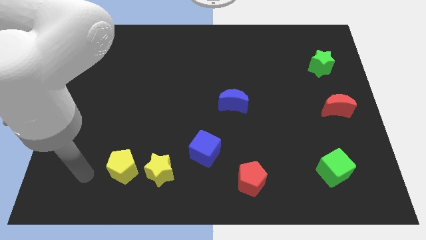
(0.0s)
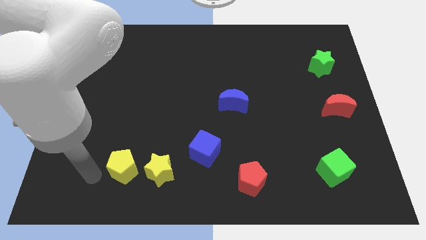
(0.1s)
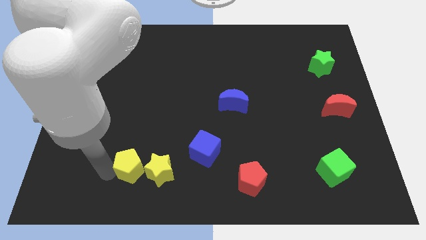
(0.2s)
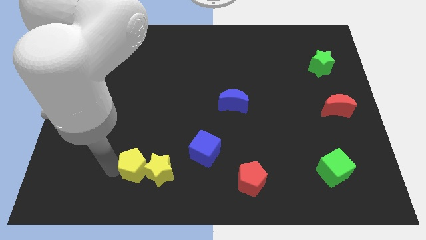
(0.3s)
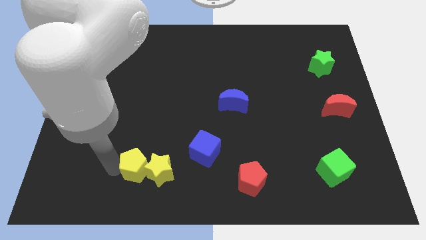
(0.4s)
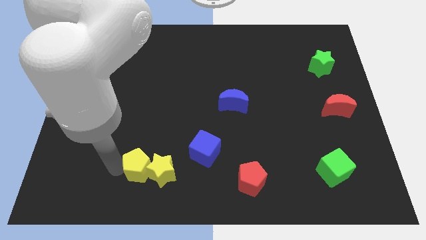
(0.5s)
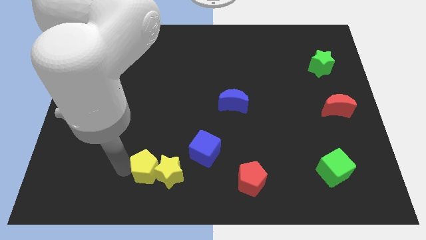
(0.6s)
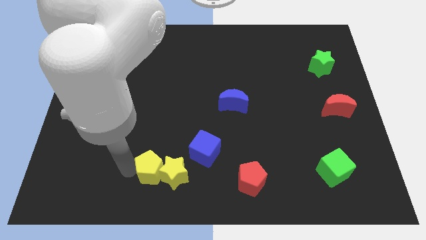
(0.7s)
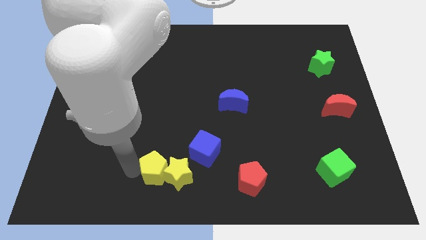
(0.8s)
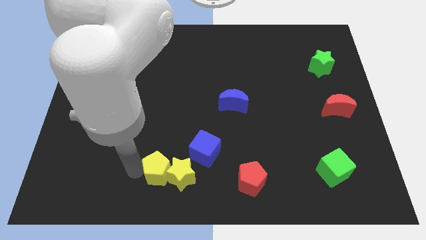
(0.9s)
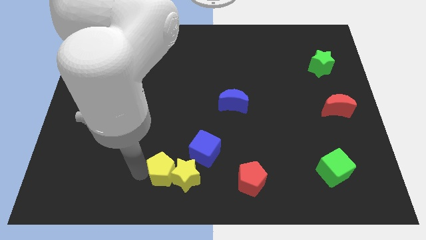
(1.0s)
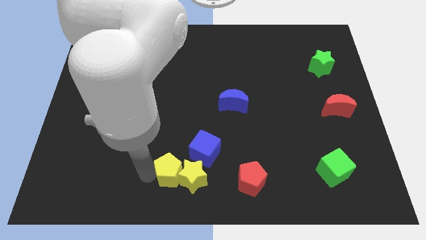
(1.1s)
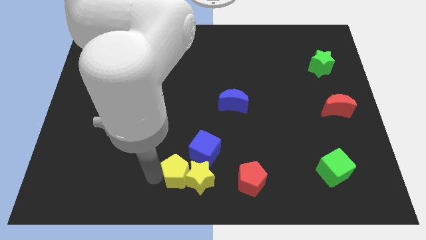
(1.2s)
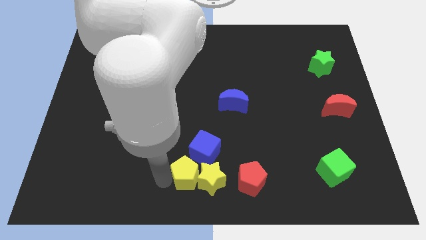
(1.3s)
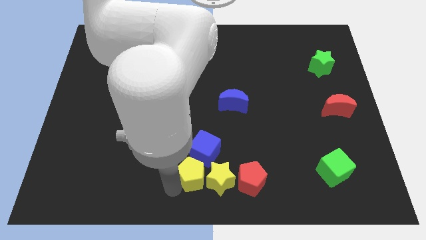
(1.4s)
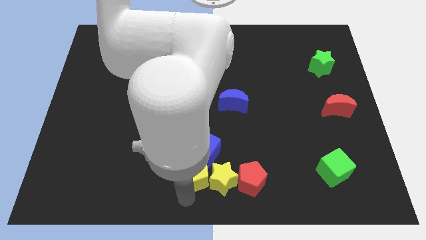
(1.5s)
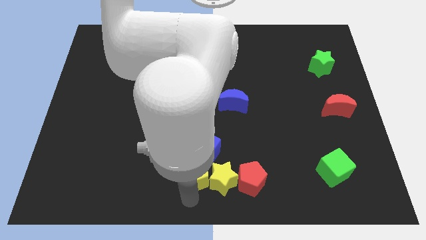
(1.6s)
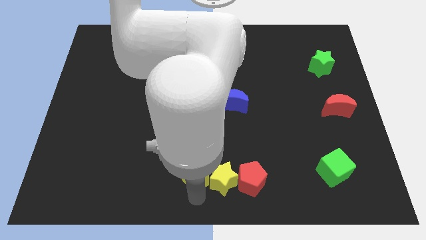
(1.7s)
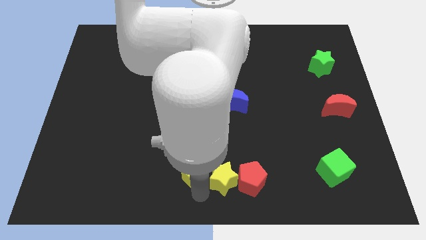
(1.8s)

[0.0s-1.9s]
move the yellow pentagon below the blue cube

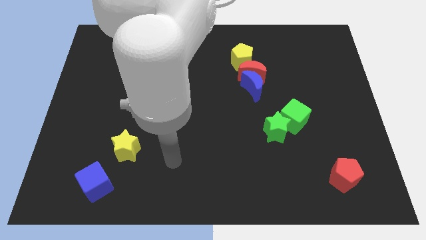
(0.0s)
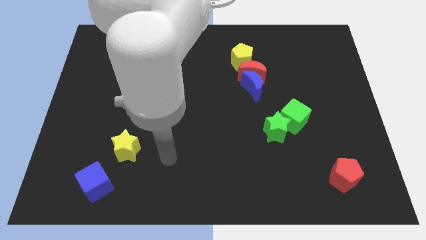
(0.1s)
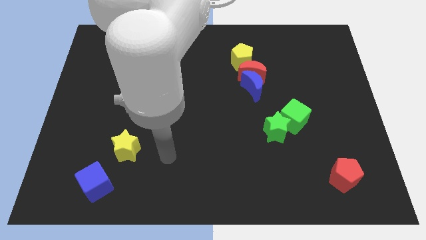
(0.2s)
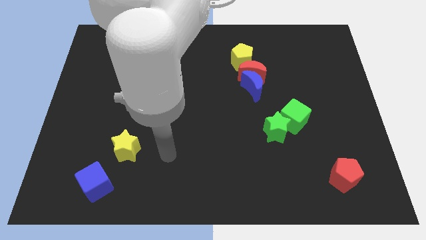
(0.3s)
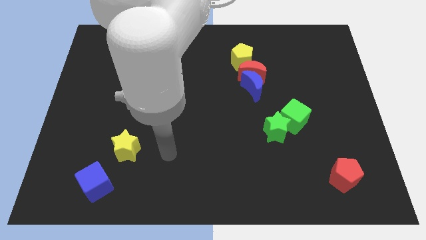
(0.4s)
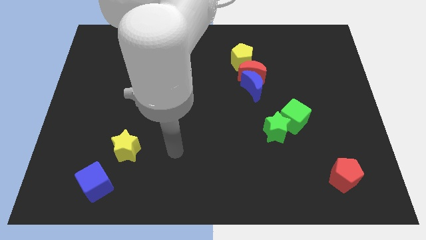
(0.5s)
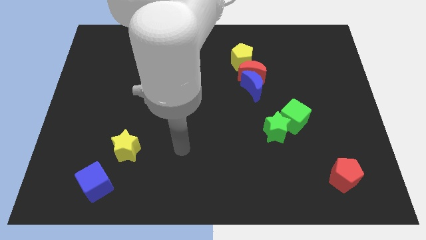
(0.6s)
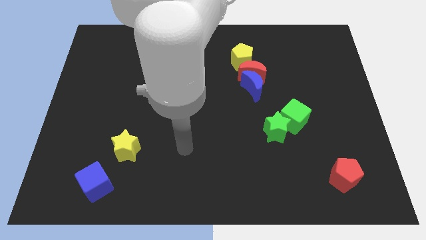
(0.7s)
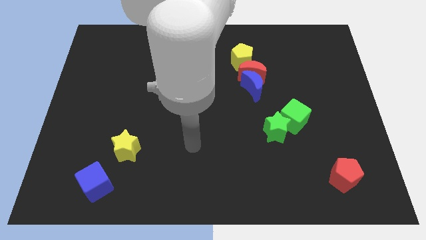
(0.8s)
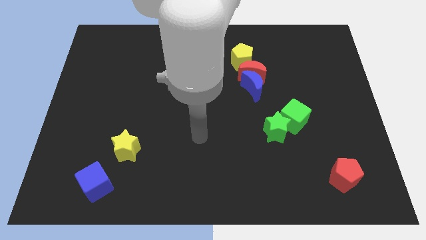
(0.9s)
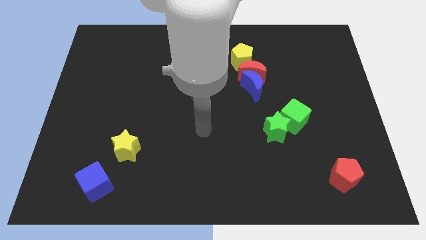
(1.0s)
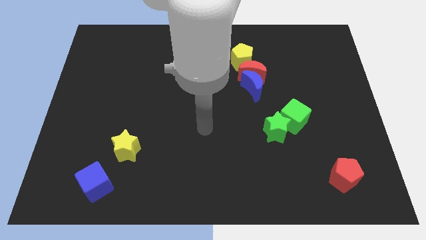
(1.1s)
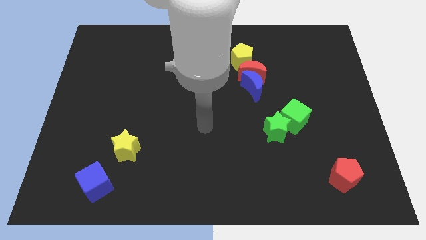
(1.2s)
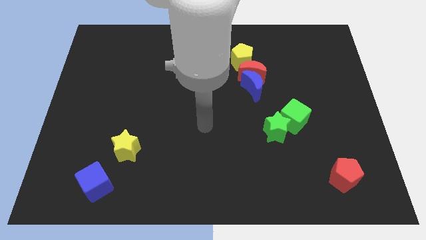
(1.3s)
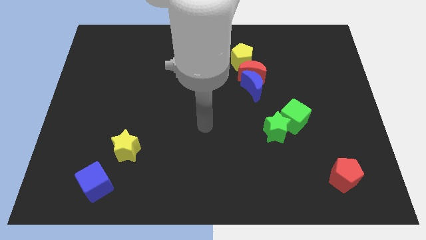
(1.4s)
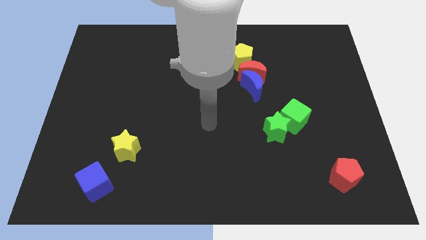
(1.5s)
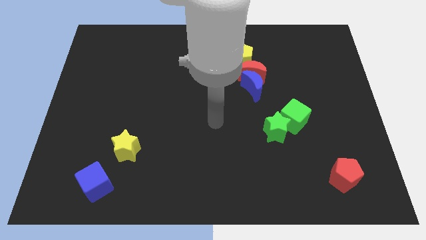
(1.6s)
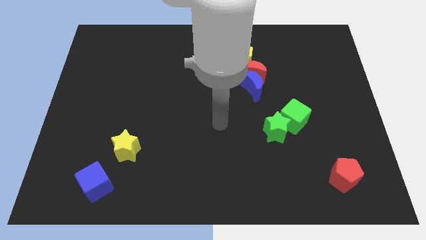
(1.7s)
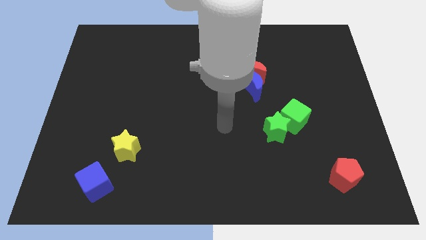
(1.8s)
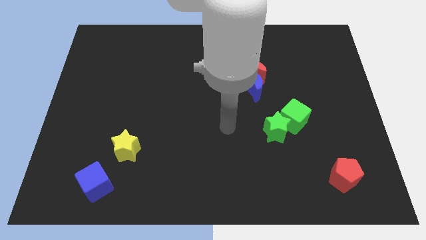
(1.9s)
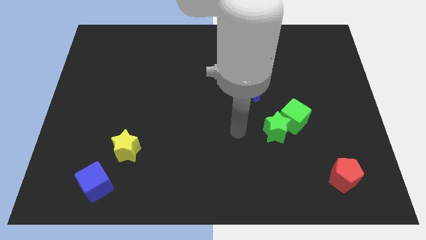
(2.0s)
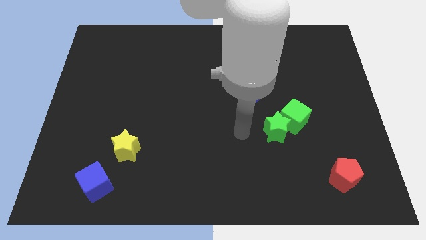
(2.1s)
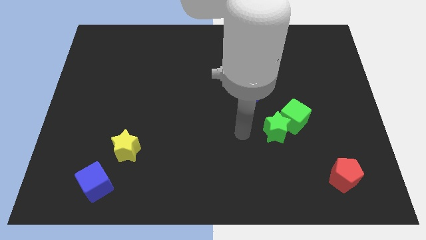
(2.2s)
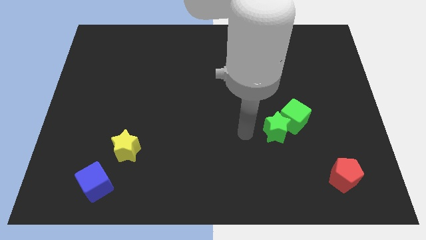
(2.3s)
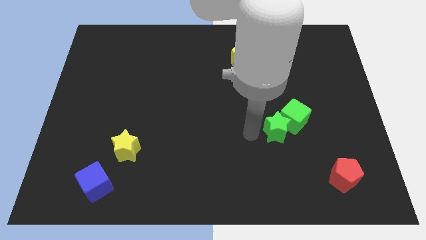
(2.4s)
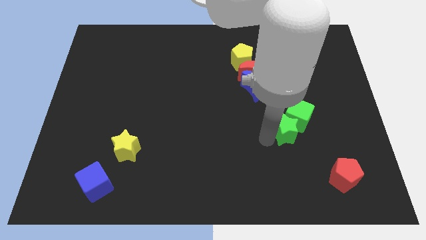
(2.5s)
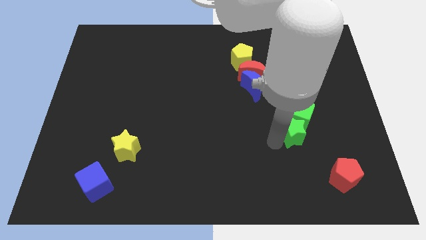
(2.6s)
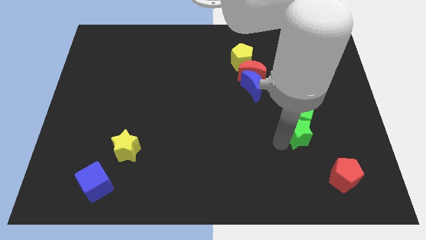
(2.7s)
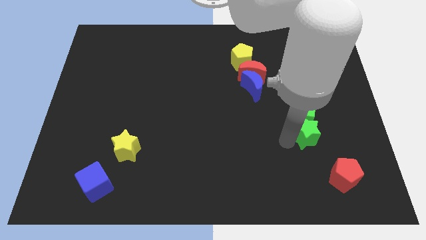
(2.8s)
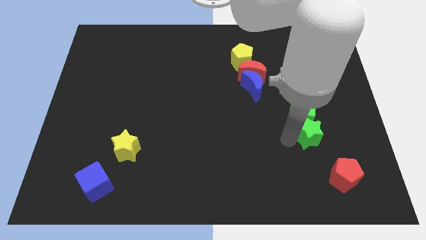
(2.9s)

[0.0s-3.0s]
slide the green blocks slightly to the right

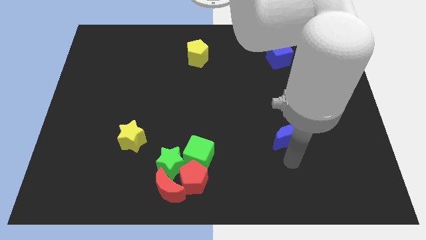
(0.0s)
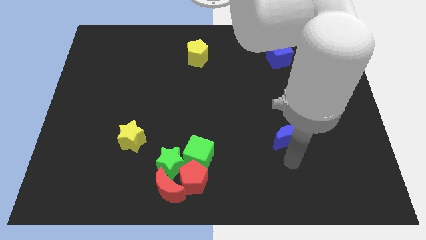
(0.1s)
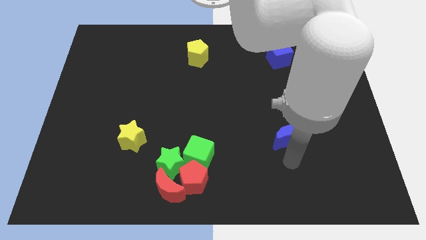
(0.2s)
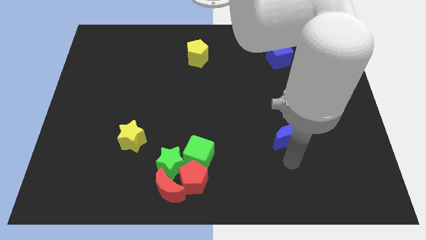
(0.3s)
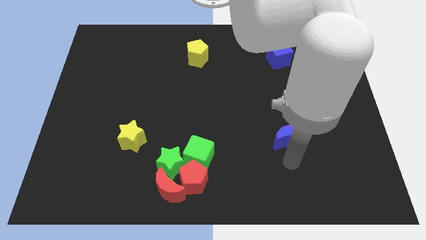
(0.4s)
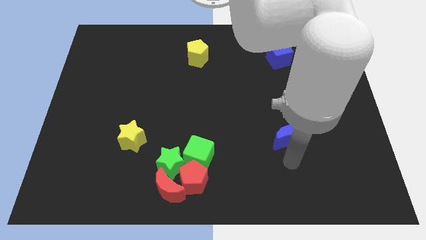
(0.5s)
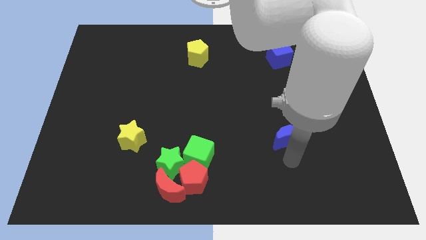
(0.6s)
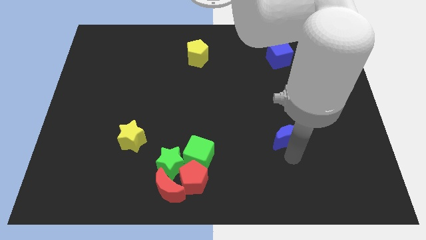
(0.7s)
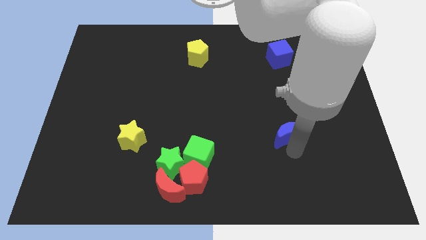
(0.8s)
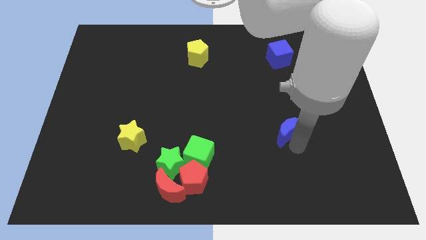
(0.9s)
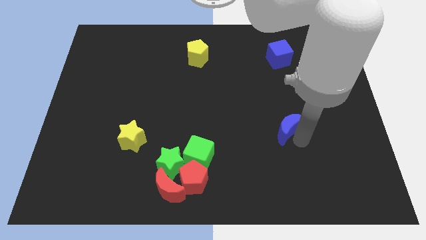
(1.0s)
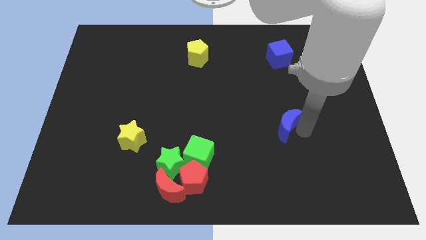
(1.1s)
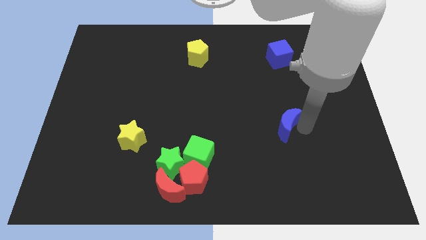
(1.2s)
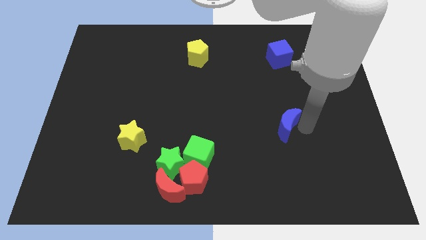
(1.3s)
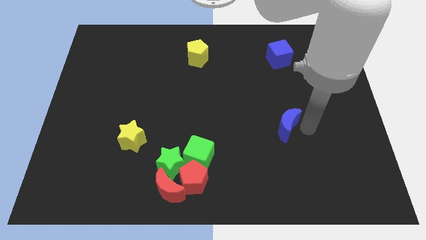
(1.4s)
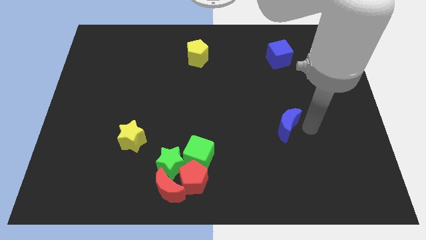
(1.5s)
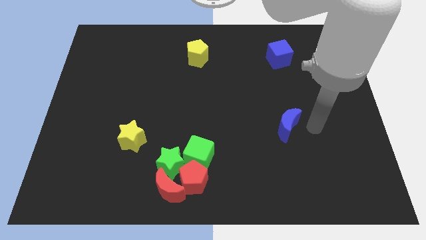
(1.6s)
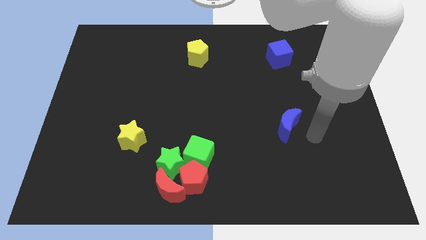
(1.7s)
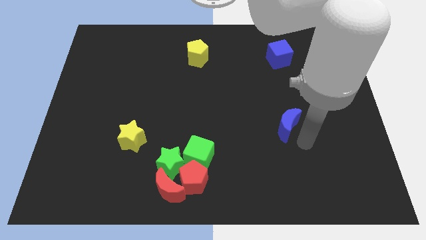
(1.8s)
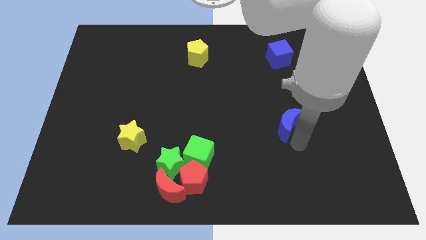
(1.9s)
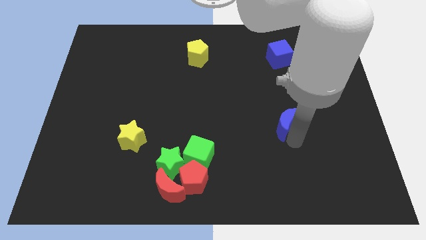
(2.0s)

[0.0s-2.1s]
slightly push blue crescent upwards

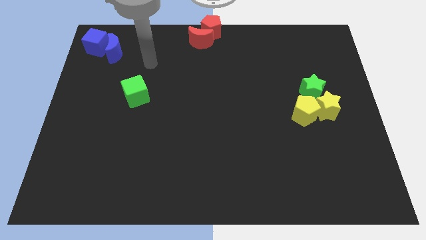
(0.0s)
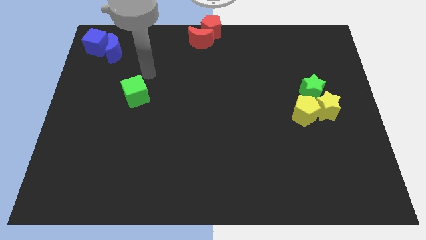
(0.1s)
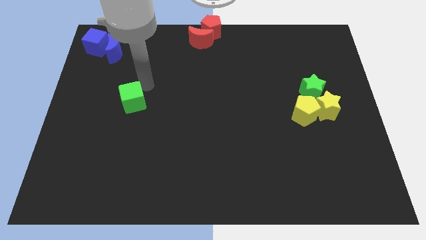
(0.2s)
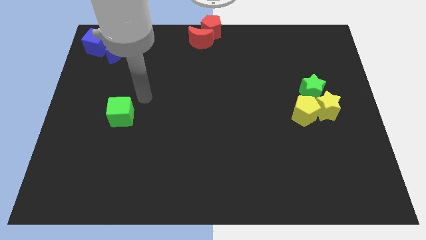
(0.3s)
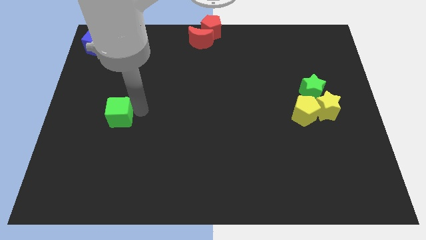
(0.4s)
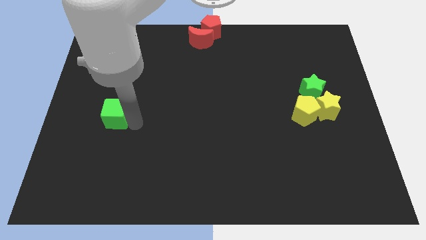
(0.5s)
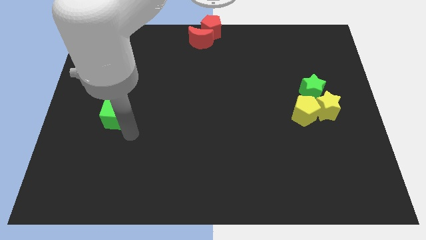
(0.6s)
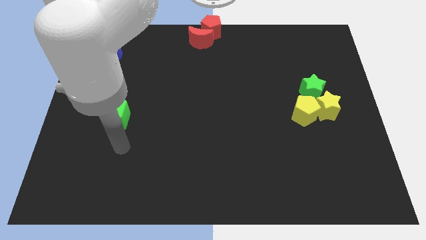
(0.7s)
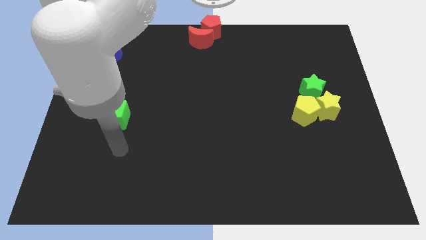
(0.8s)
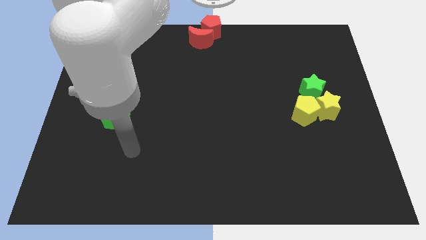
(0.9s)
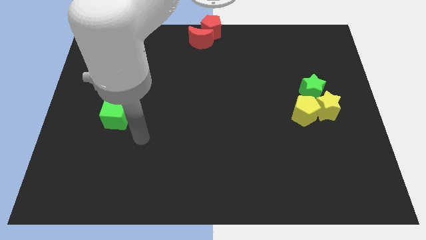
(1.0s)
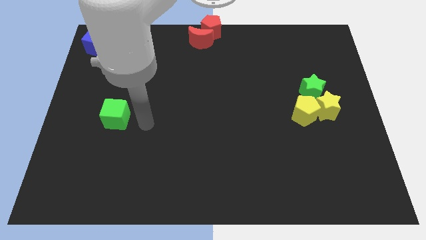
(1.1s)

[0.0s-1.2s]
slightly move the green cube towards down

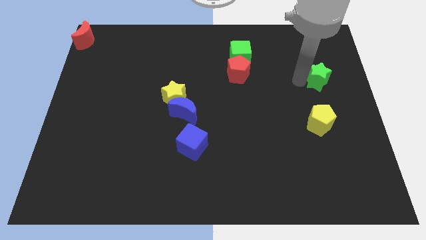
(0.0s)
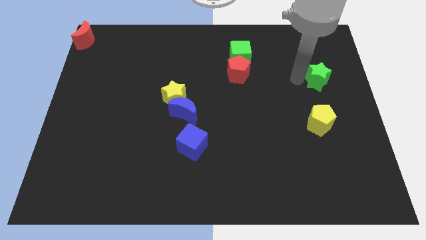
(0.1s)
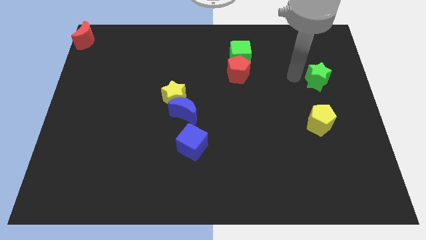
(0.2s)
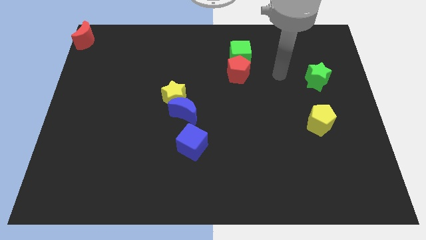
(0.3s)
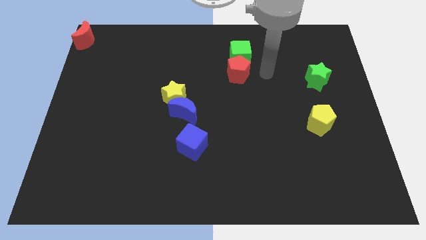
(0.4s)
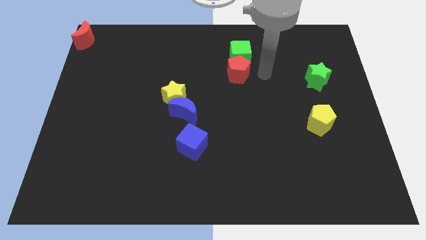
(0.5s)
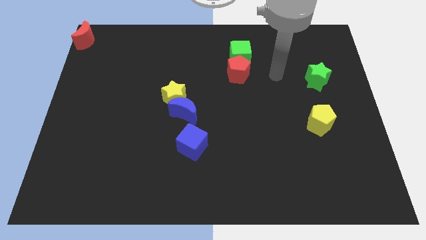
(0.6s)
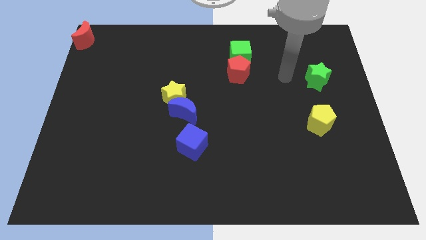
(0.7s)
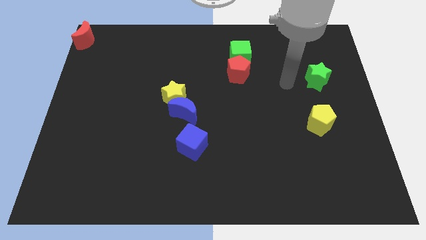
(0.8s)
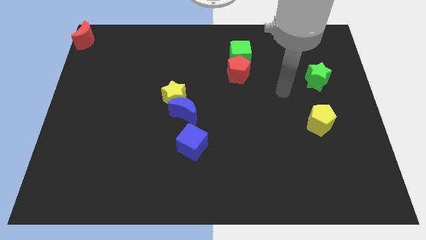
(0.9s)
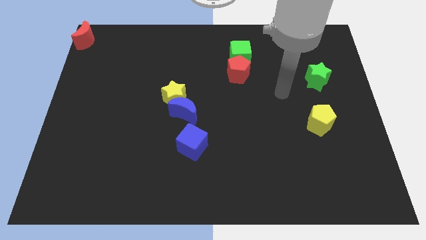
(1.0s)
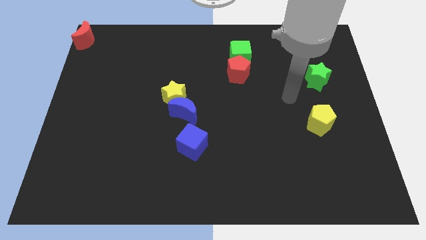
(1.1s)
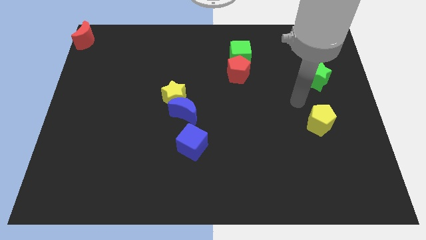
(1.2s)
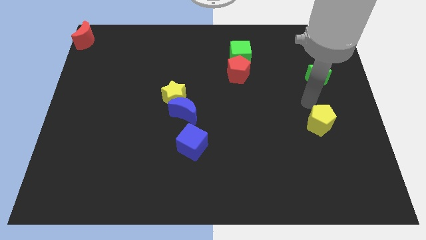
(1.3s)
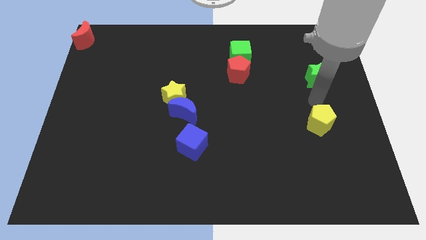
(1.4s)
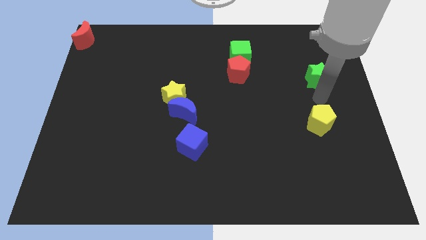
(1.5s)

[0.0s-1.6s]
point your arm in between the green star and yellow pentagon
